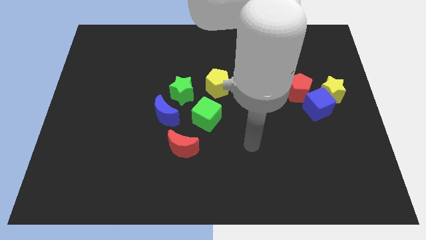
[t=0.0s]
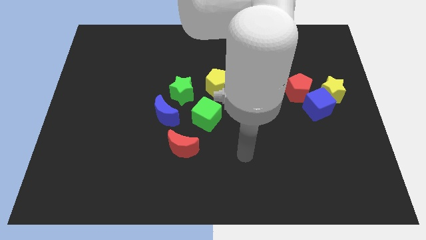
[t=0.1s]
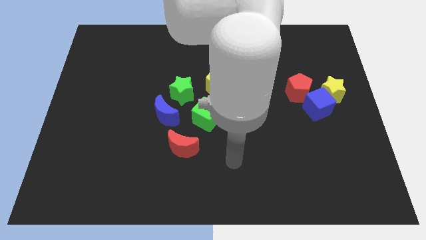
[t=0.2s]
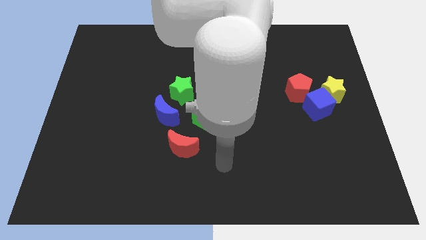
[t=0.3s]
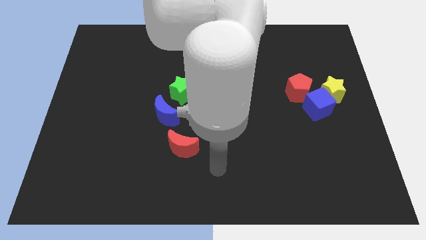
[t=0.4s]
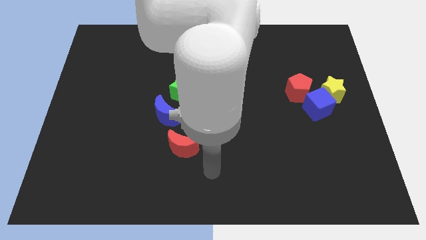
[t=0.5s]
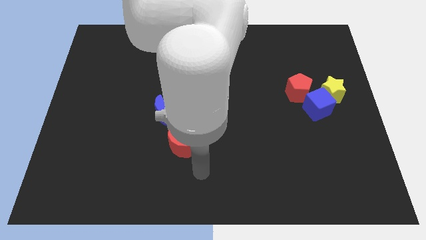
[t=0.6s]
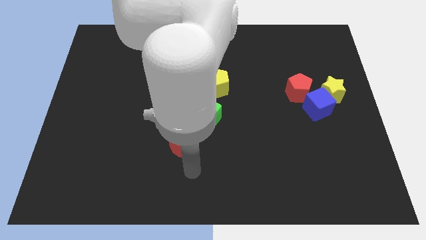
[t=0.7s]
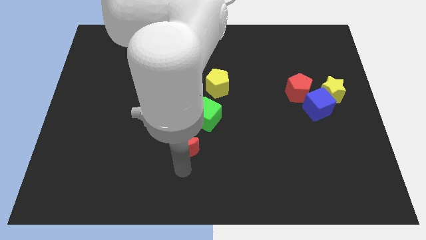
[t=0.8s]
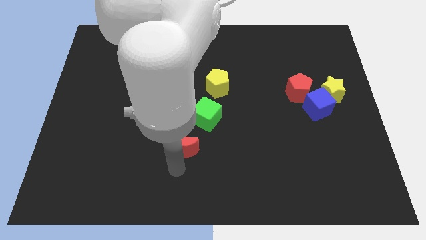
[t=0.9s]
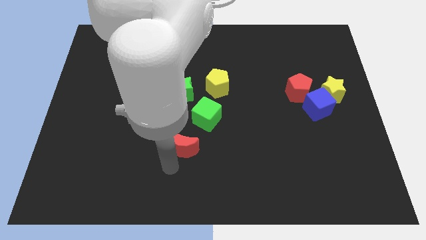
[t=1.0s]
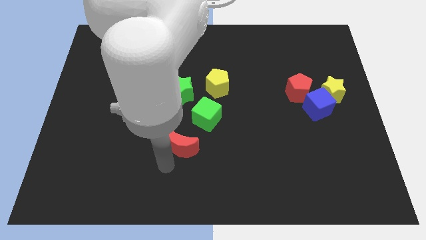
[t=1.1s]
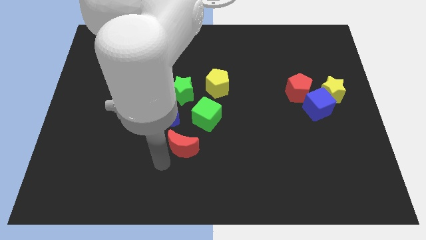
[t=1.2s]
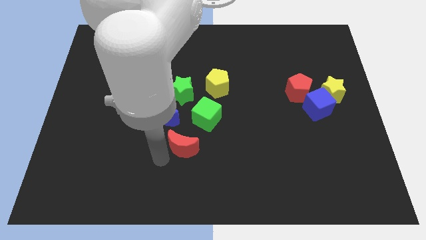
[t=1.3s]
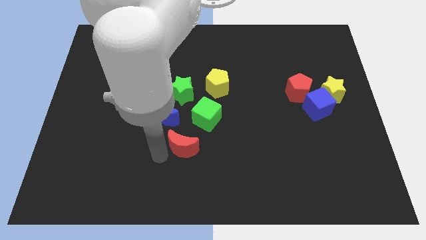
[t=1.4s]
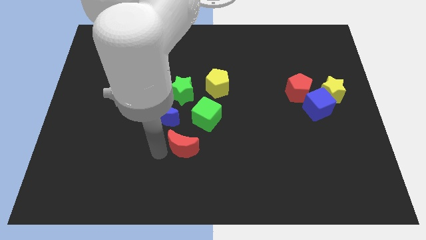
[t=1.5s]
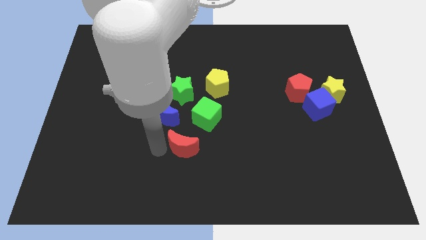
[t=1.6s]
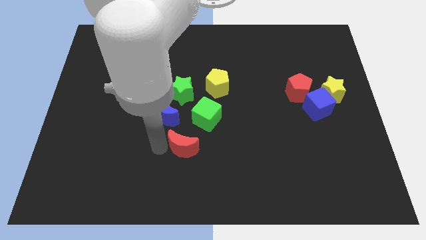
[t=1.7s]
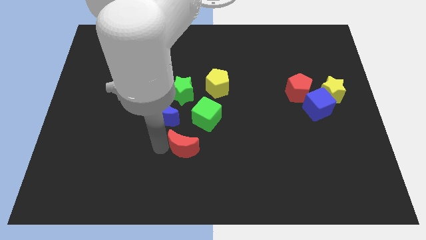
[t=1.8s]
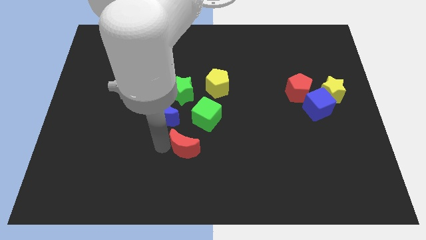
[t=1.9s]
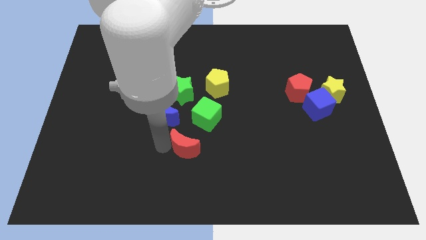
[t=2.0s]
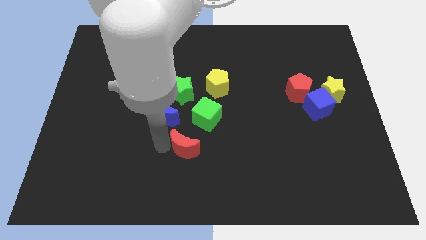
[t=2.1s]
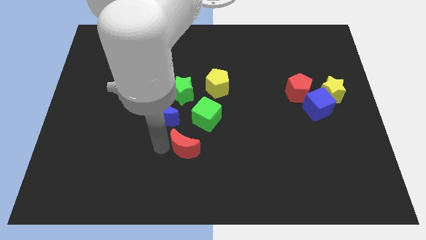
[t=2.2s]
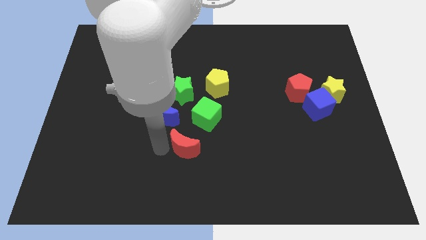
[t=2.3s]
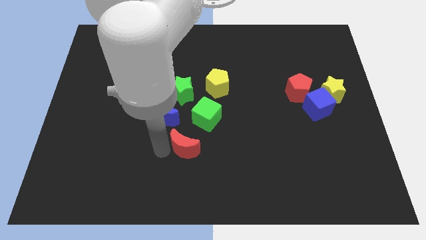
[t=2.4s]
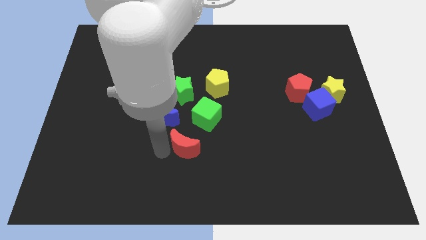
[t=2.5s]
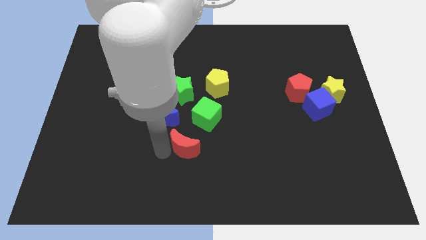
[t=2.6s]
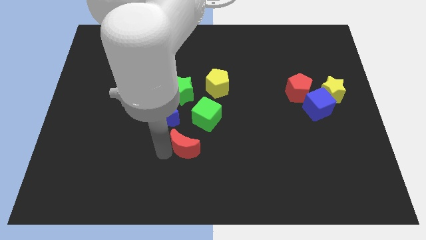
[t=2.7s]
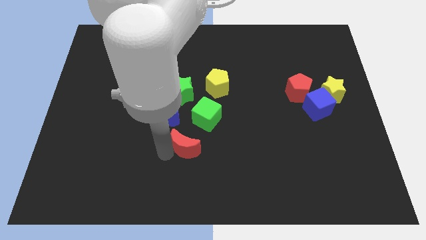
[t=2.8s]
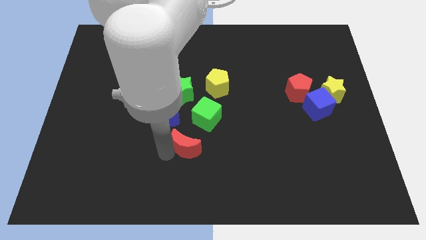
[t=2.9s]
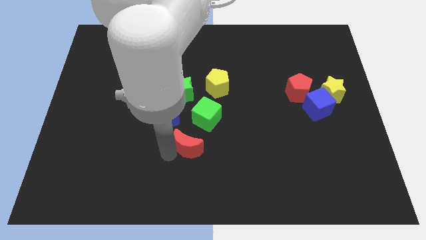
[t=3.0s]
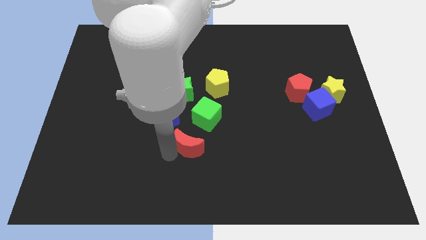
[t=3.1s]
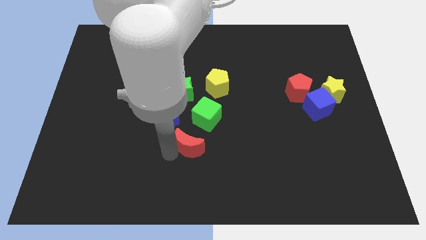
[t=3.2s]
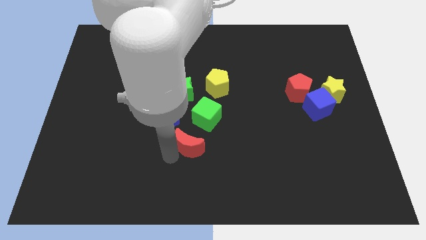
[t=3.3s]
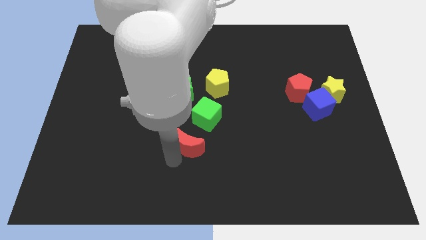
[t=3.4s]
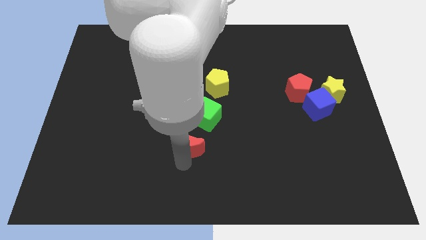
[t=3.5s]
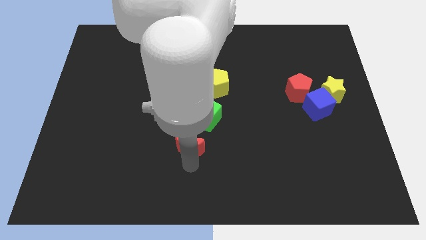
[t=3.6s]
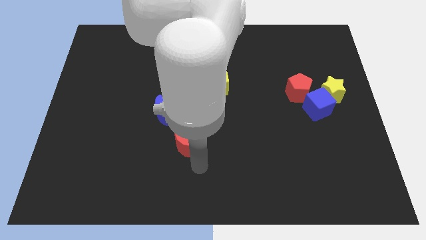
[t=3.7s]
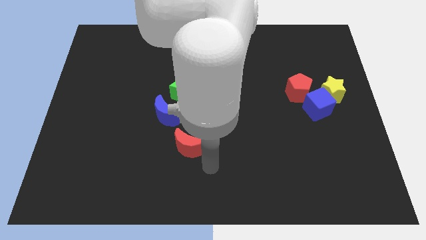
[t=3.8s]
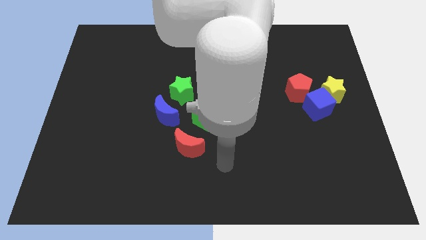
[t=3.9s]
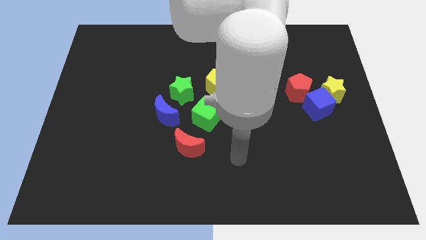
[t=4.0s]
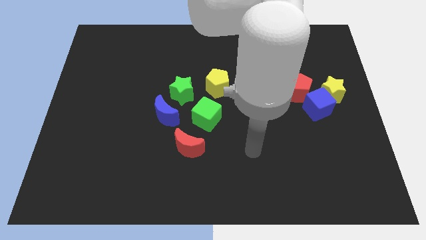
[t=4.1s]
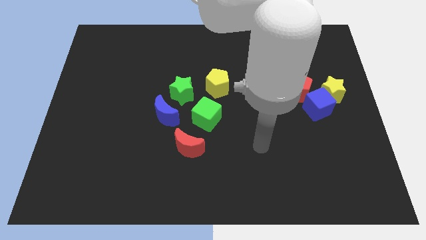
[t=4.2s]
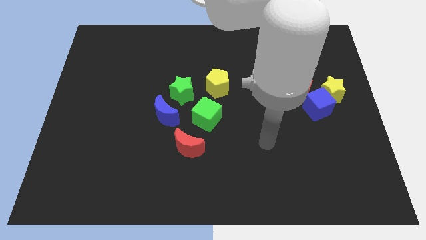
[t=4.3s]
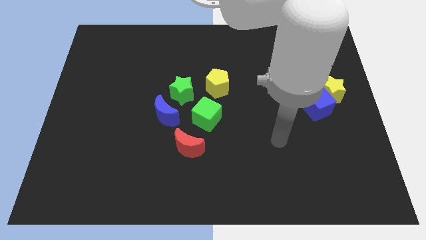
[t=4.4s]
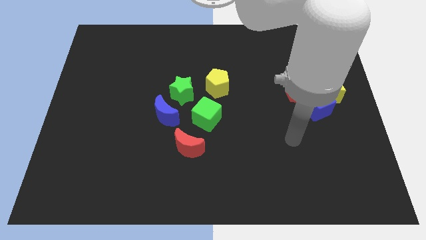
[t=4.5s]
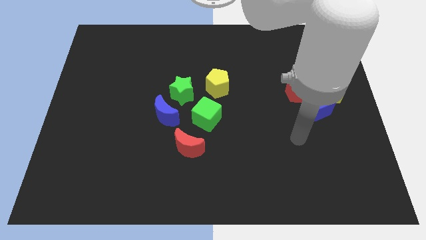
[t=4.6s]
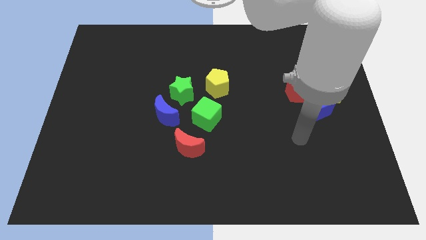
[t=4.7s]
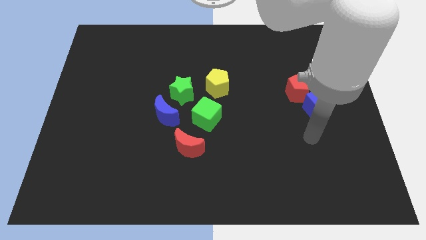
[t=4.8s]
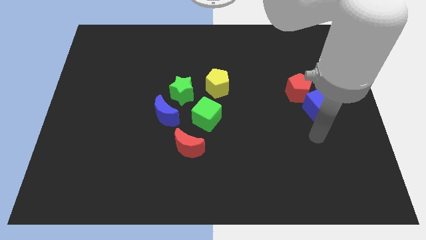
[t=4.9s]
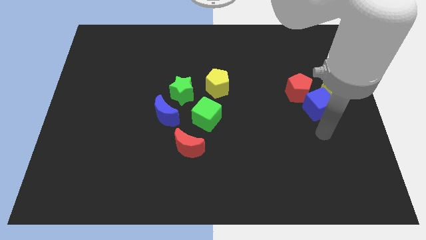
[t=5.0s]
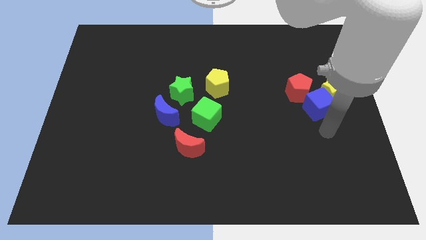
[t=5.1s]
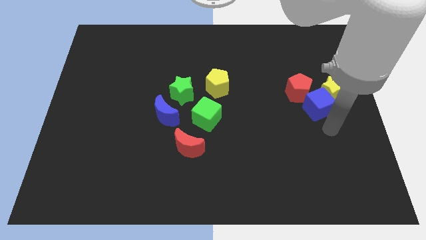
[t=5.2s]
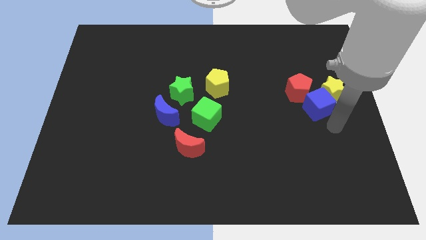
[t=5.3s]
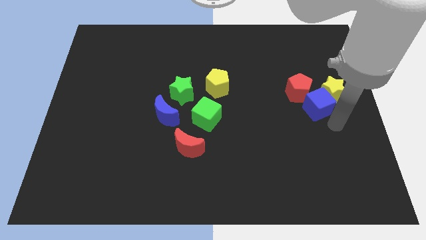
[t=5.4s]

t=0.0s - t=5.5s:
slightly push the red crescent from the right side

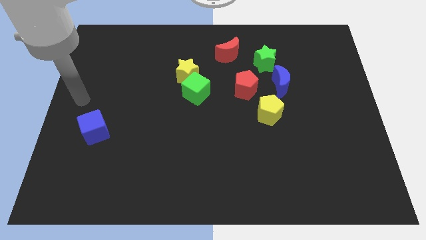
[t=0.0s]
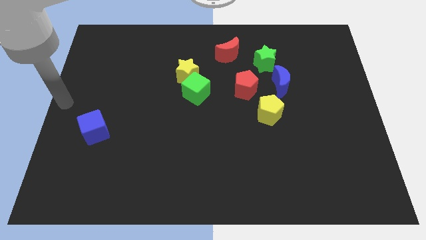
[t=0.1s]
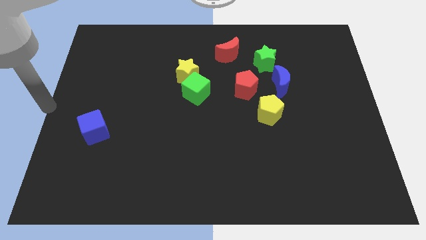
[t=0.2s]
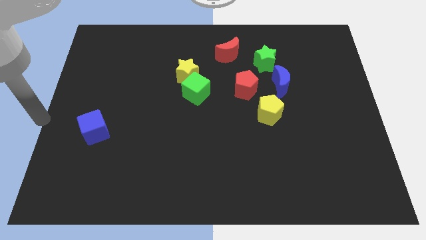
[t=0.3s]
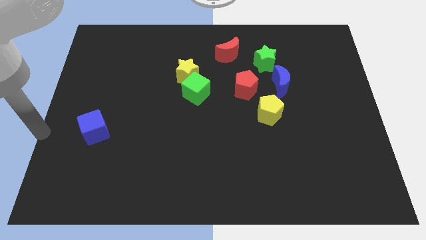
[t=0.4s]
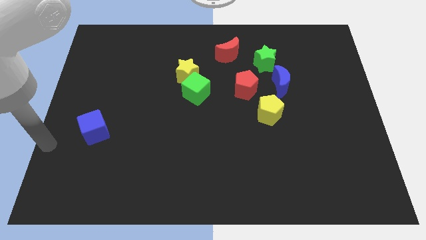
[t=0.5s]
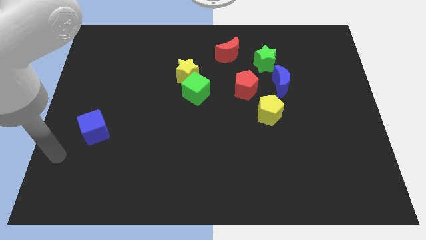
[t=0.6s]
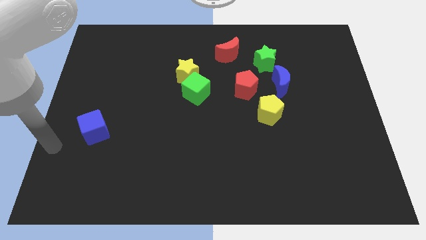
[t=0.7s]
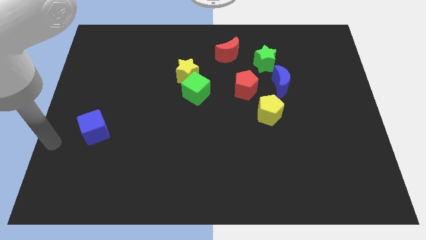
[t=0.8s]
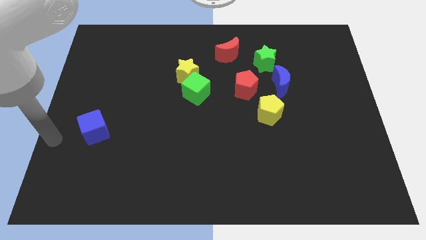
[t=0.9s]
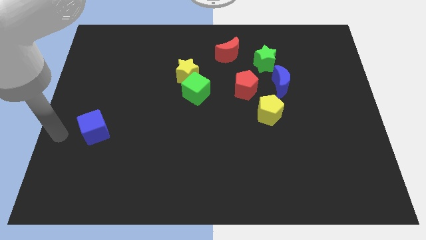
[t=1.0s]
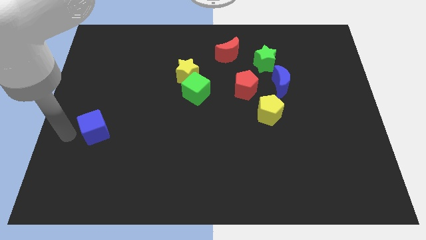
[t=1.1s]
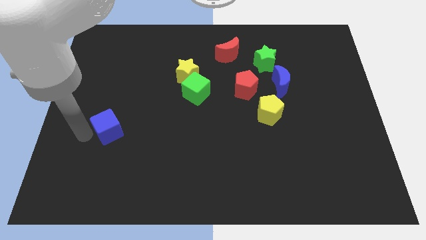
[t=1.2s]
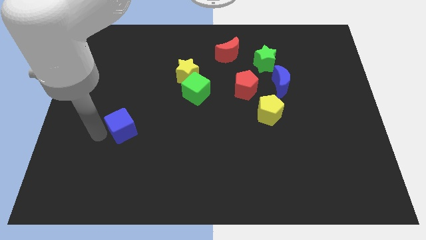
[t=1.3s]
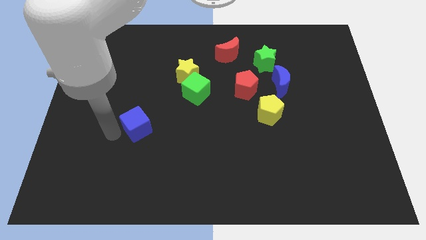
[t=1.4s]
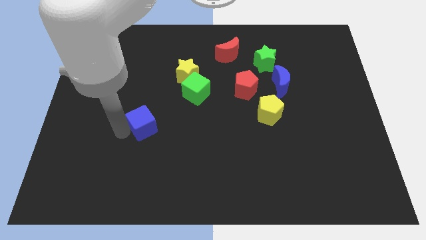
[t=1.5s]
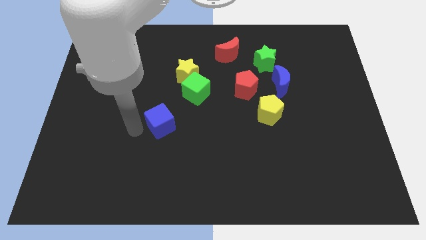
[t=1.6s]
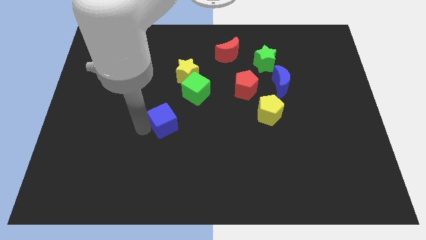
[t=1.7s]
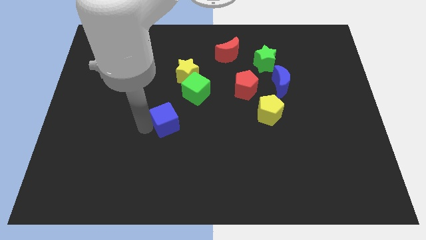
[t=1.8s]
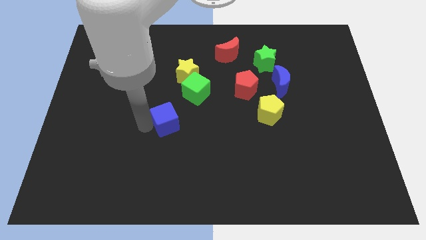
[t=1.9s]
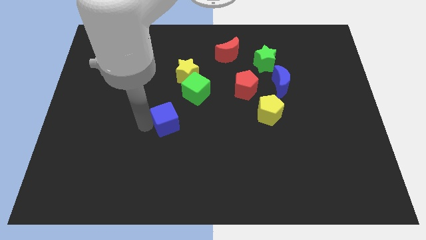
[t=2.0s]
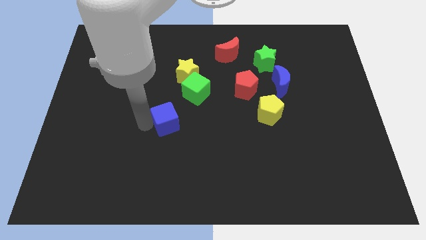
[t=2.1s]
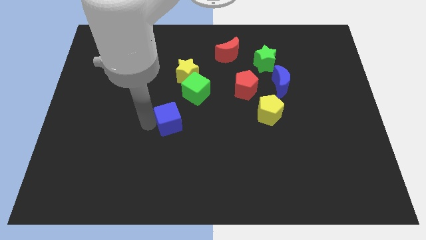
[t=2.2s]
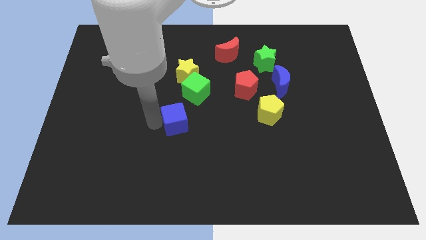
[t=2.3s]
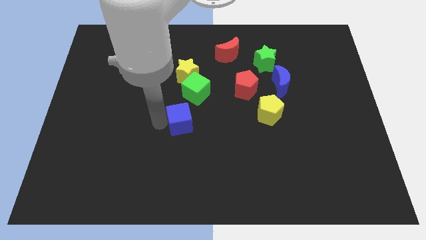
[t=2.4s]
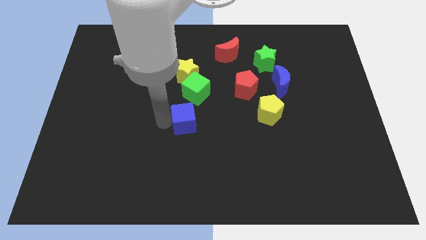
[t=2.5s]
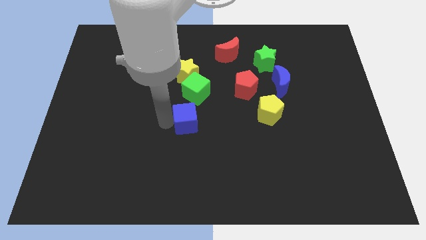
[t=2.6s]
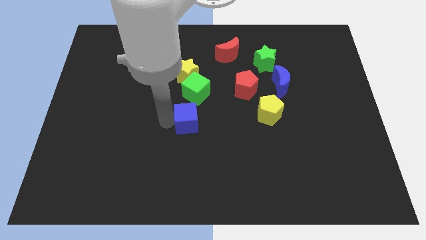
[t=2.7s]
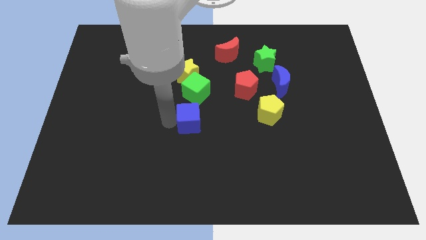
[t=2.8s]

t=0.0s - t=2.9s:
move the blue cube below the green cube

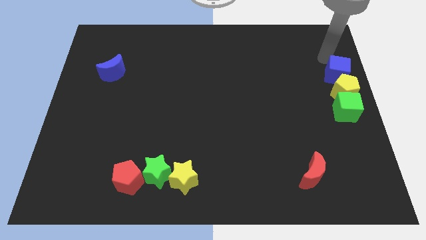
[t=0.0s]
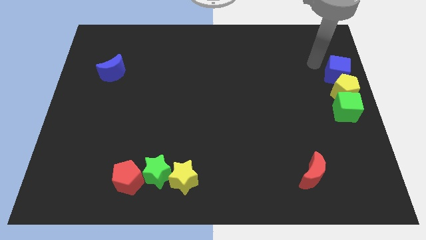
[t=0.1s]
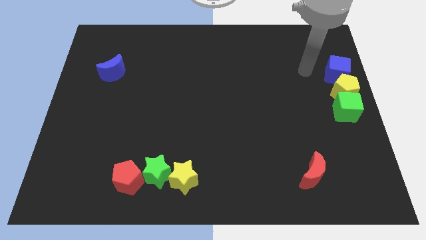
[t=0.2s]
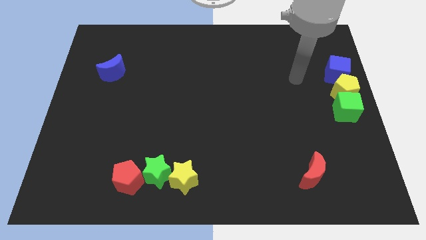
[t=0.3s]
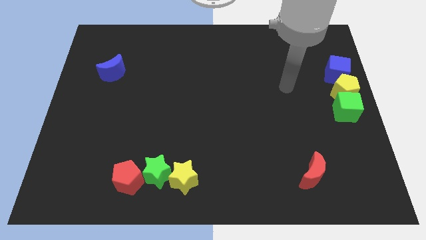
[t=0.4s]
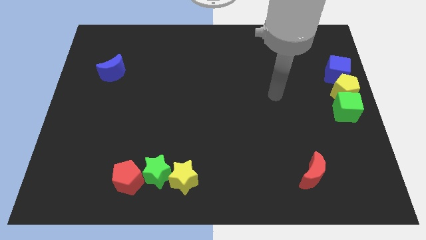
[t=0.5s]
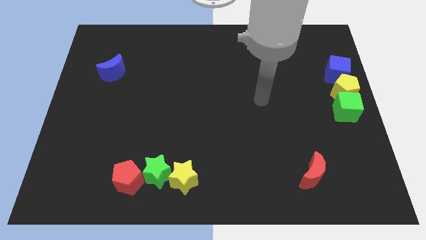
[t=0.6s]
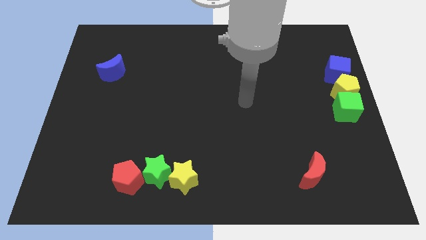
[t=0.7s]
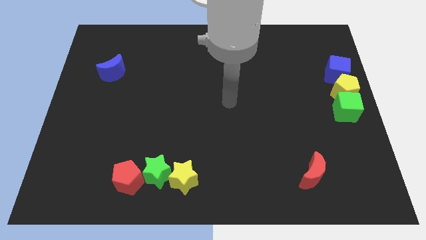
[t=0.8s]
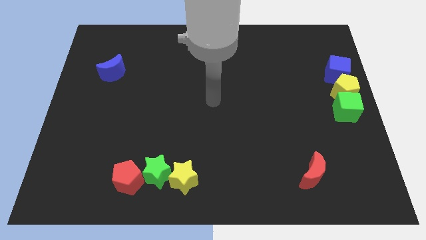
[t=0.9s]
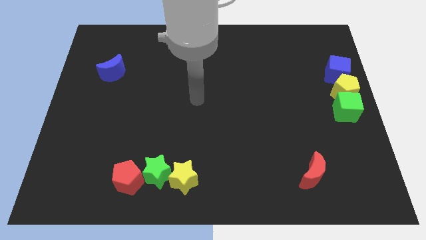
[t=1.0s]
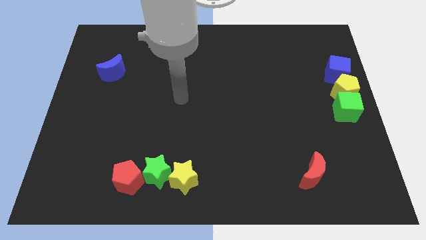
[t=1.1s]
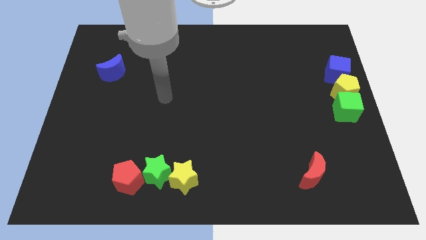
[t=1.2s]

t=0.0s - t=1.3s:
move your arm away from the blue cube
